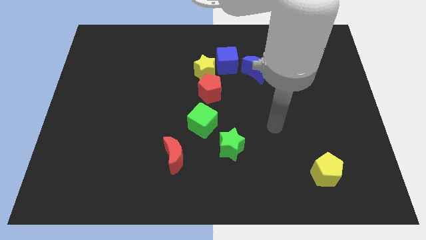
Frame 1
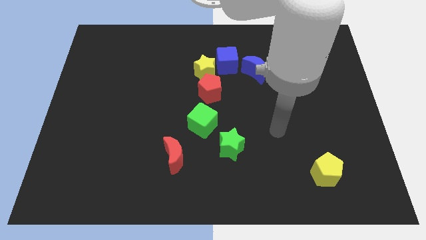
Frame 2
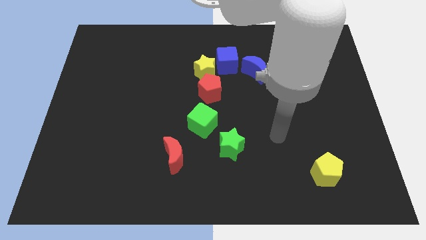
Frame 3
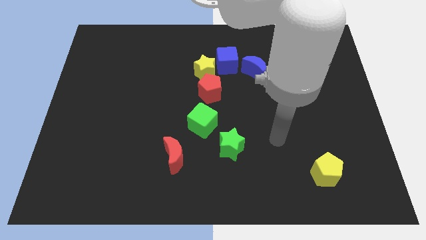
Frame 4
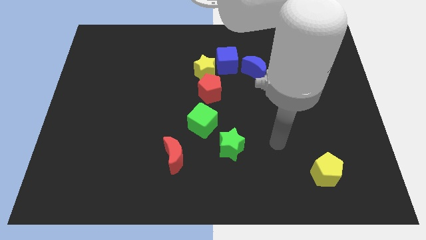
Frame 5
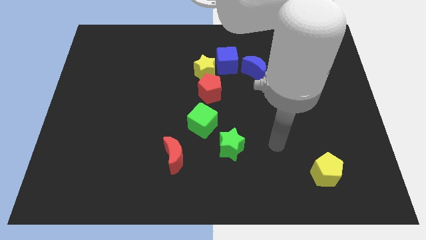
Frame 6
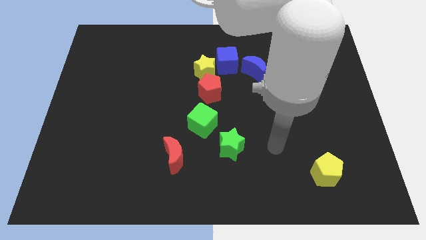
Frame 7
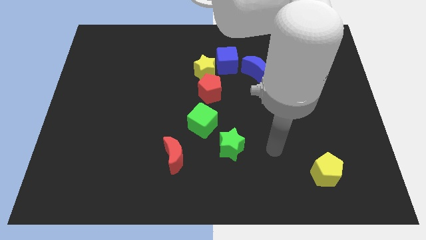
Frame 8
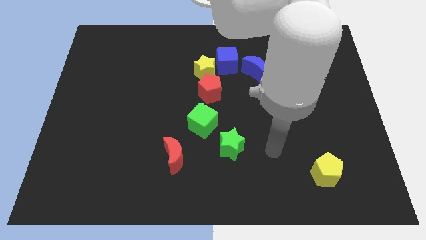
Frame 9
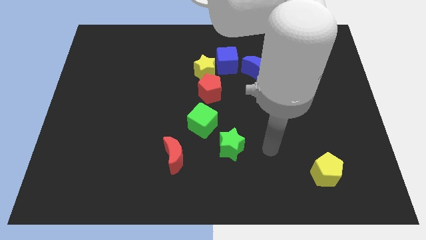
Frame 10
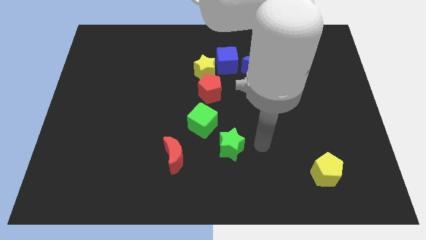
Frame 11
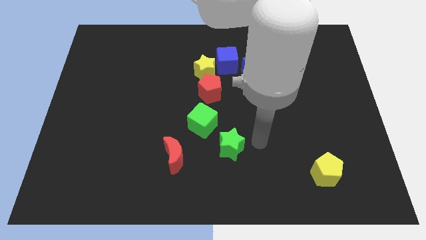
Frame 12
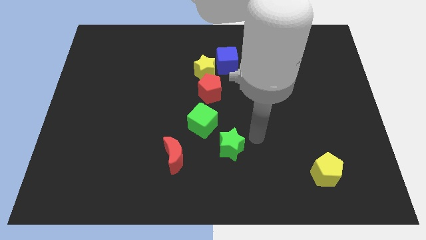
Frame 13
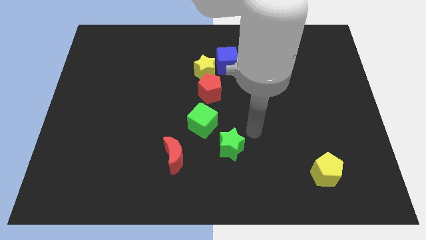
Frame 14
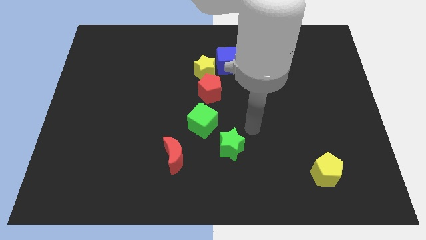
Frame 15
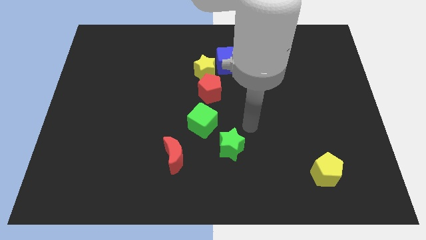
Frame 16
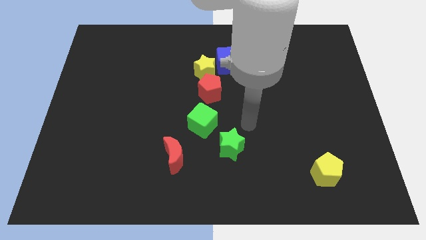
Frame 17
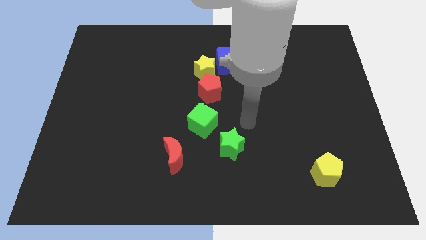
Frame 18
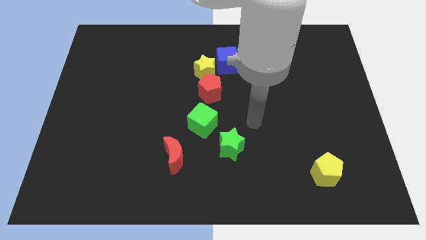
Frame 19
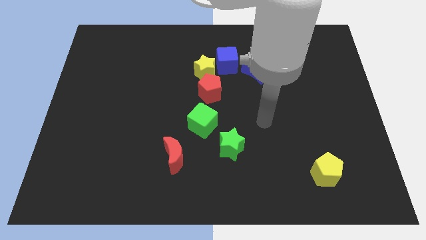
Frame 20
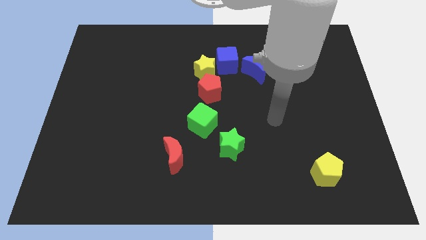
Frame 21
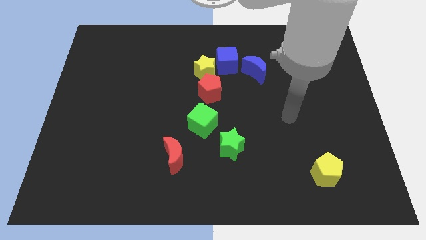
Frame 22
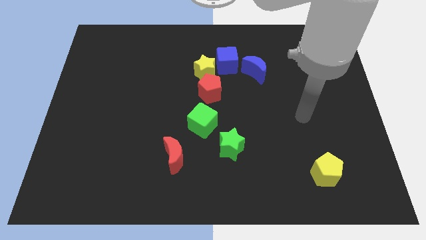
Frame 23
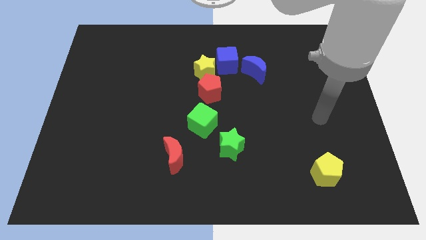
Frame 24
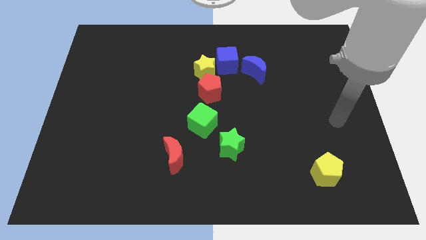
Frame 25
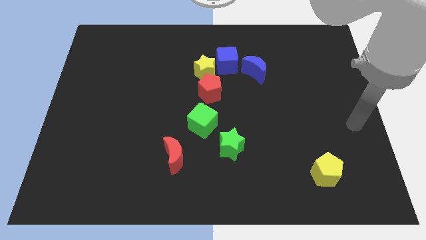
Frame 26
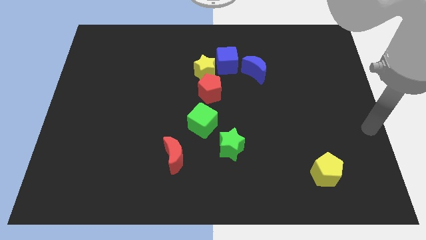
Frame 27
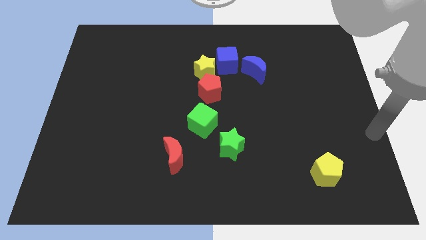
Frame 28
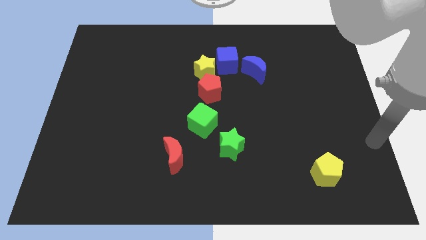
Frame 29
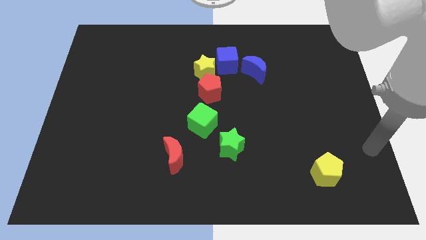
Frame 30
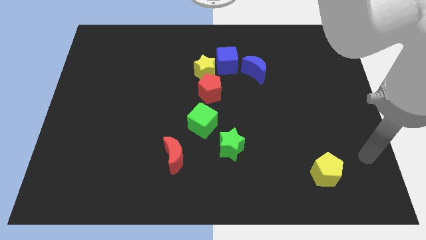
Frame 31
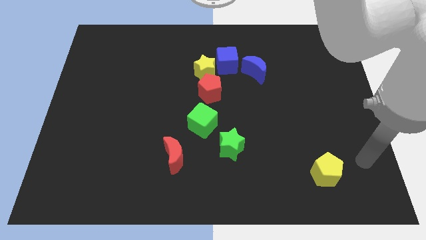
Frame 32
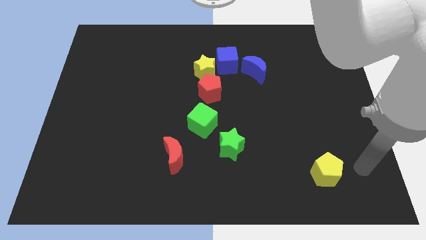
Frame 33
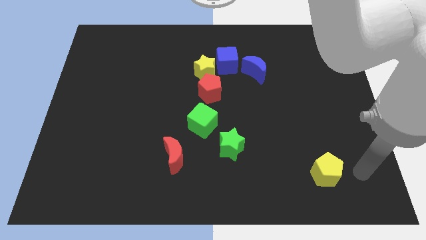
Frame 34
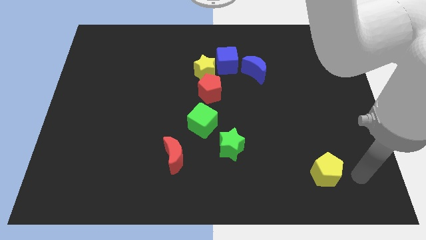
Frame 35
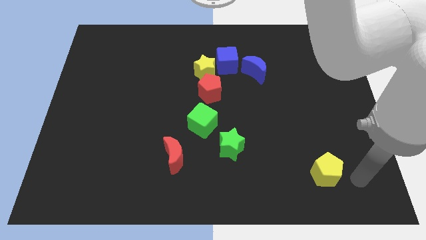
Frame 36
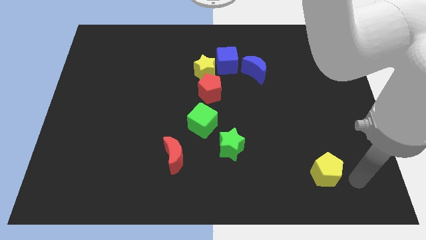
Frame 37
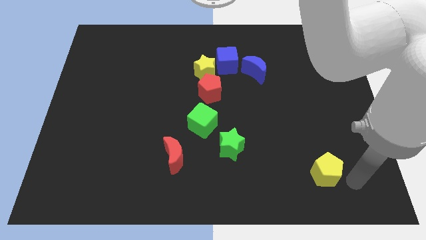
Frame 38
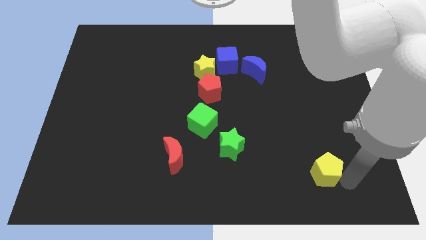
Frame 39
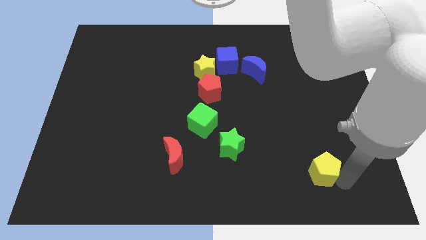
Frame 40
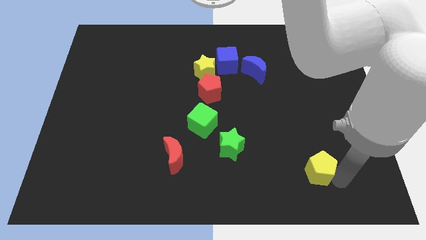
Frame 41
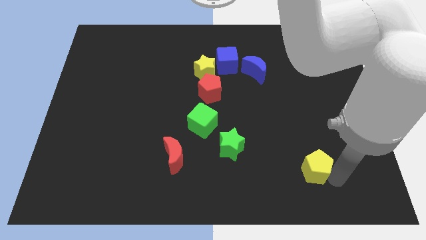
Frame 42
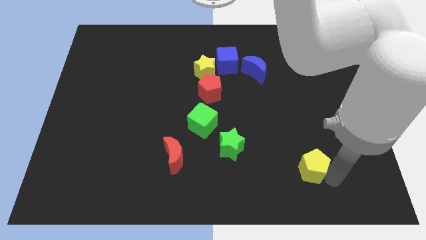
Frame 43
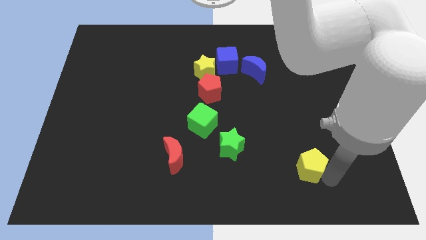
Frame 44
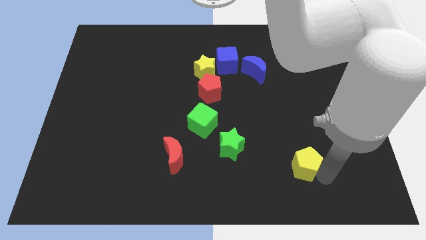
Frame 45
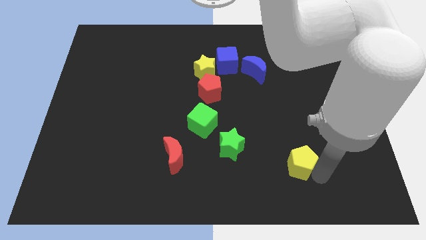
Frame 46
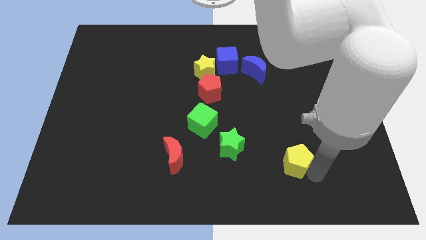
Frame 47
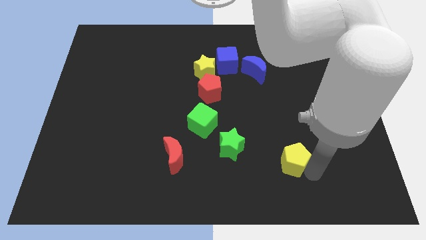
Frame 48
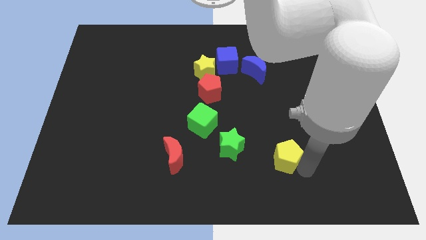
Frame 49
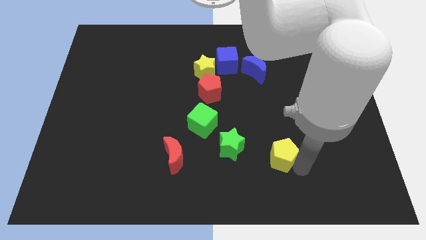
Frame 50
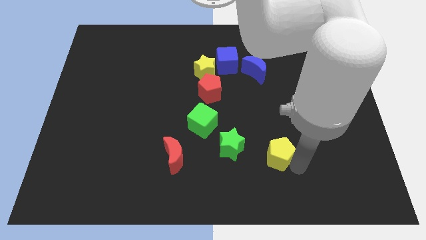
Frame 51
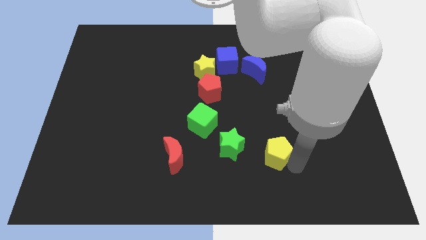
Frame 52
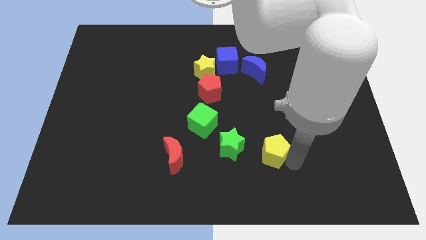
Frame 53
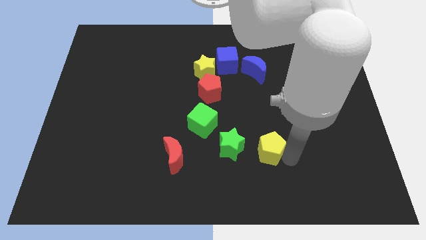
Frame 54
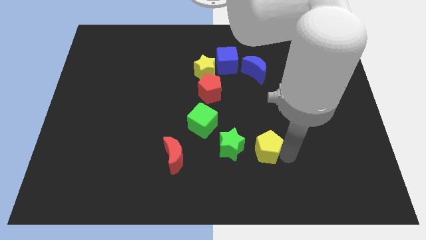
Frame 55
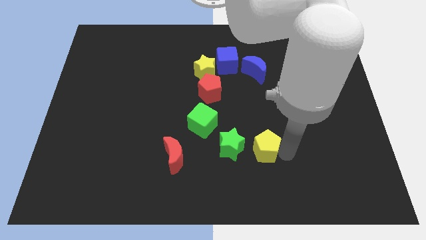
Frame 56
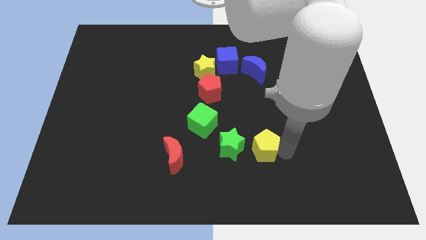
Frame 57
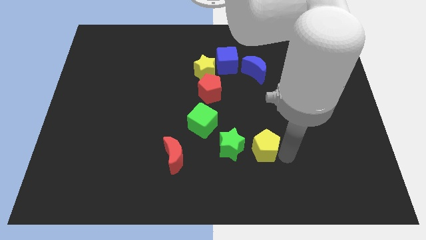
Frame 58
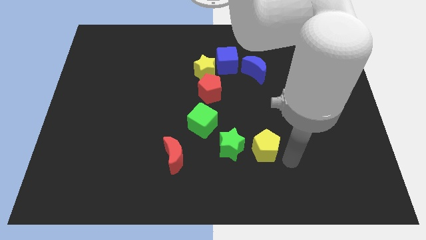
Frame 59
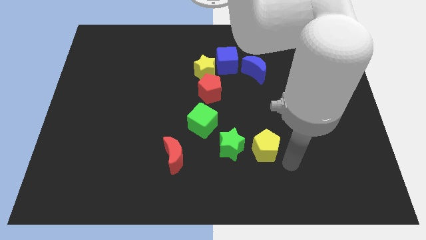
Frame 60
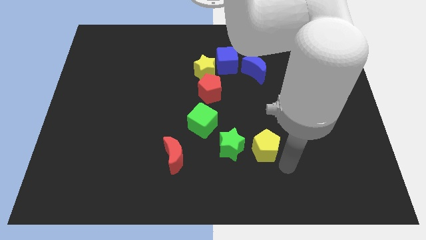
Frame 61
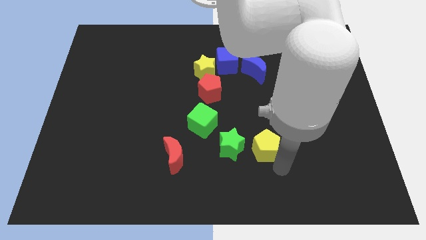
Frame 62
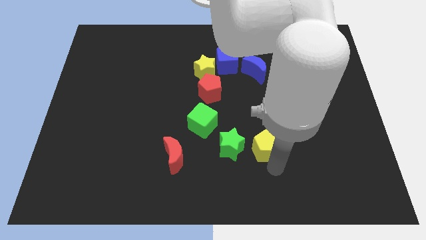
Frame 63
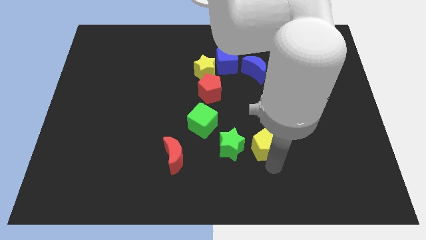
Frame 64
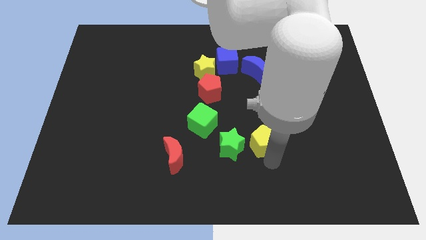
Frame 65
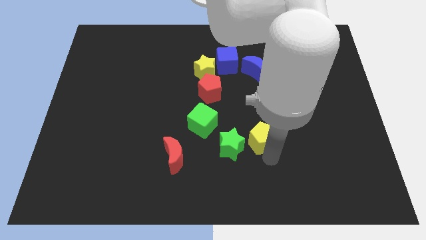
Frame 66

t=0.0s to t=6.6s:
push the yellow pentagon to the right of the green star

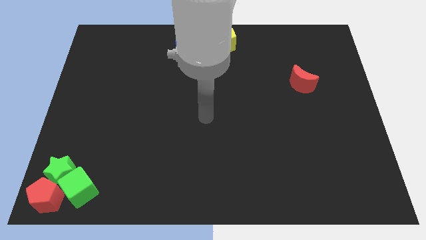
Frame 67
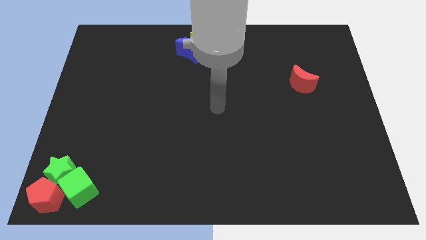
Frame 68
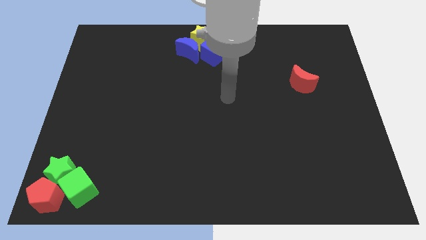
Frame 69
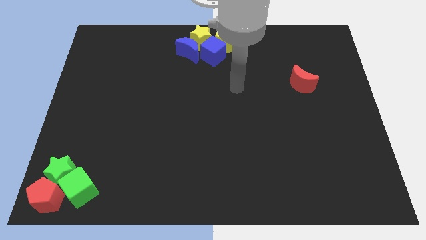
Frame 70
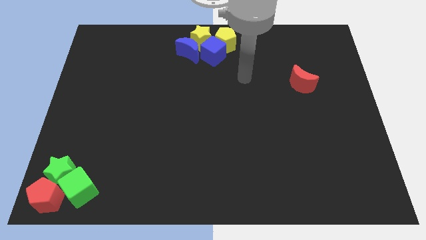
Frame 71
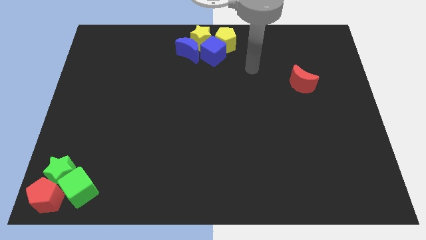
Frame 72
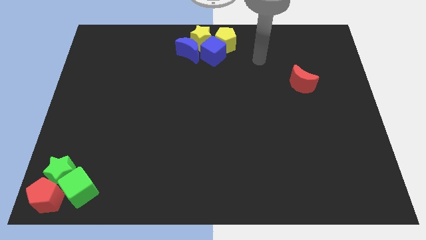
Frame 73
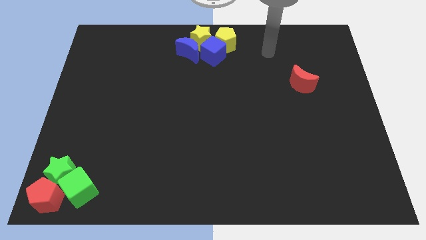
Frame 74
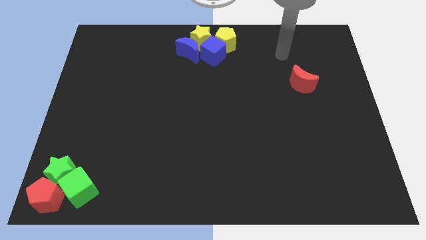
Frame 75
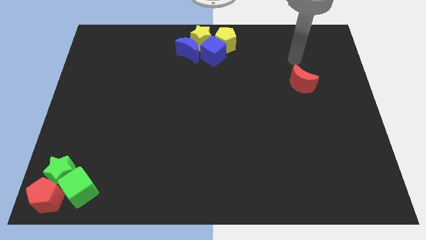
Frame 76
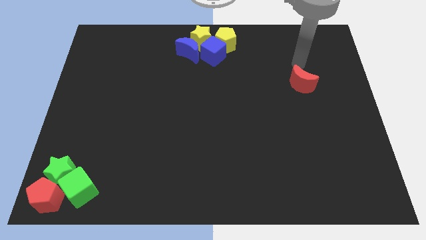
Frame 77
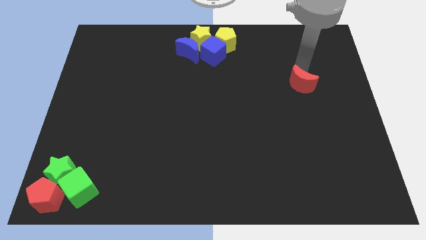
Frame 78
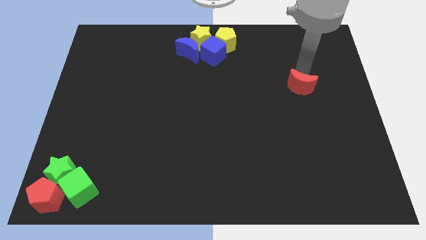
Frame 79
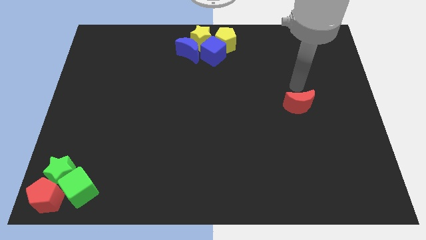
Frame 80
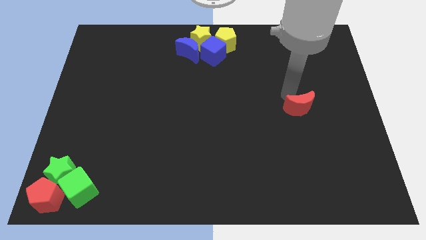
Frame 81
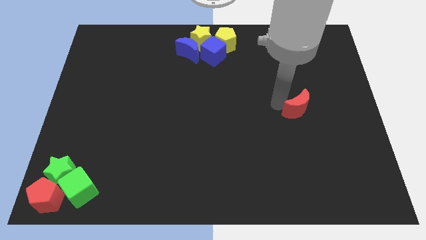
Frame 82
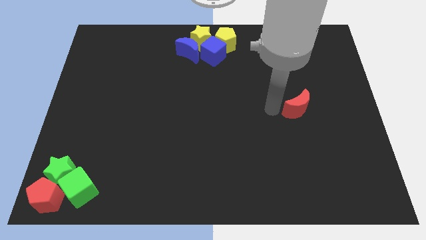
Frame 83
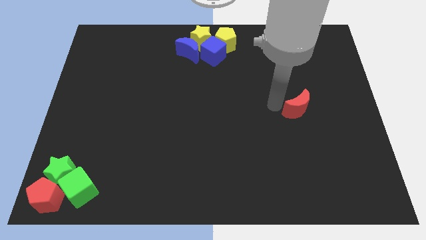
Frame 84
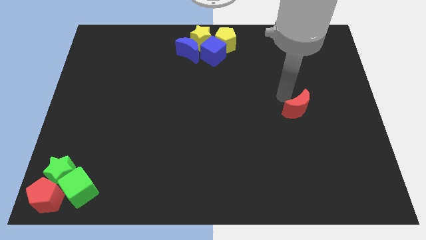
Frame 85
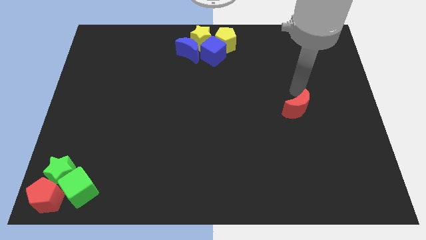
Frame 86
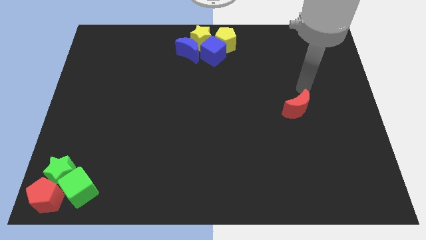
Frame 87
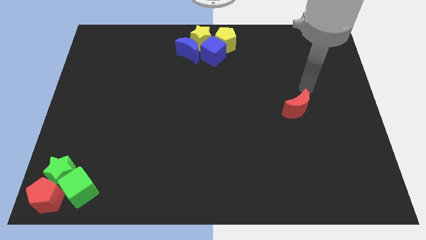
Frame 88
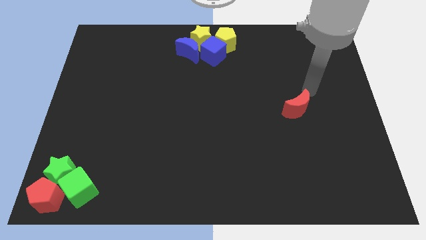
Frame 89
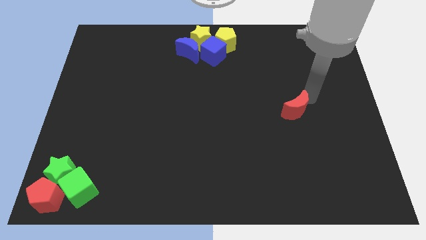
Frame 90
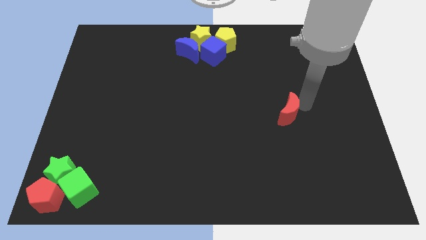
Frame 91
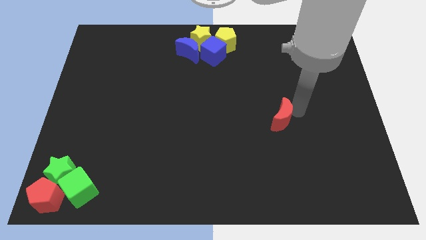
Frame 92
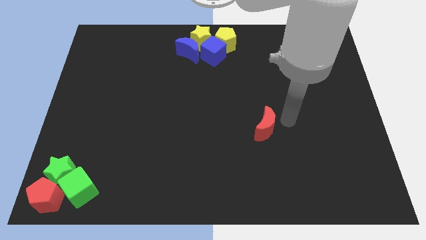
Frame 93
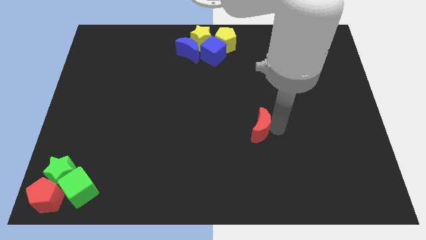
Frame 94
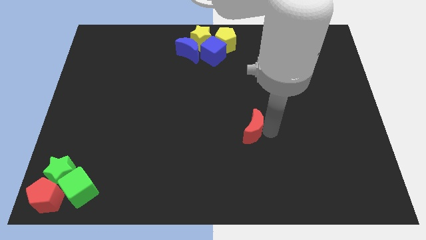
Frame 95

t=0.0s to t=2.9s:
move the red crescent slightly downwards
